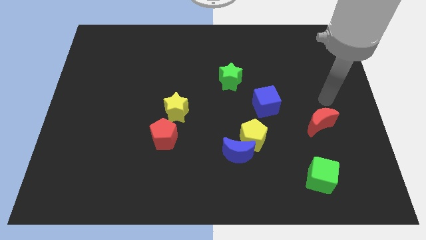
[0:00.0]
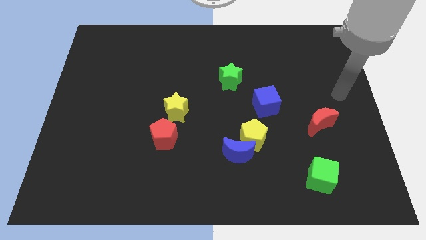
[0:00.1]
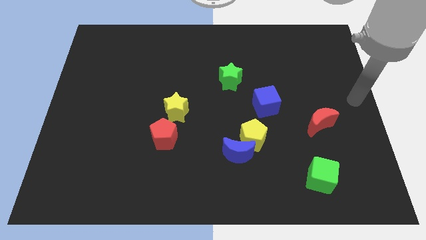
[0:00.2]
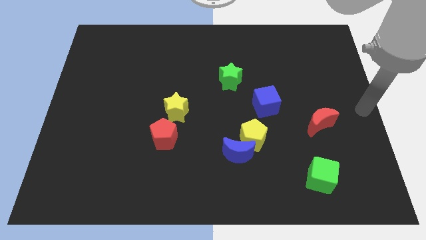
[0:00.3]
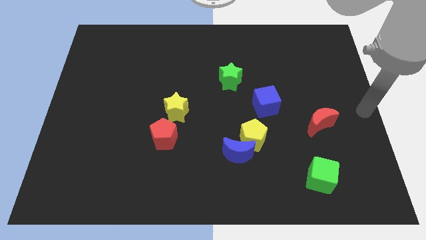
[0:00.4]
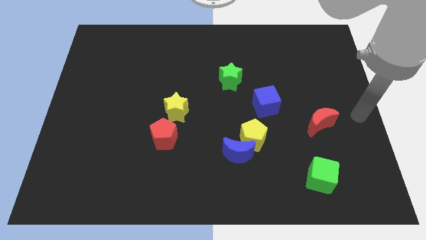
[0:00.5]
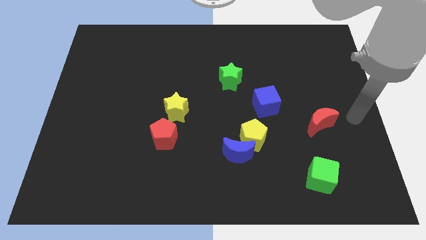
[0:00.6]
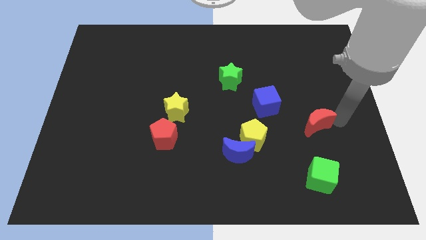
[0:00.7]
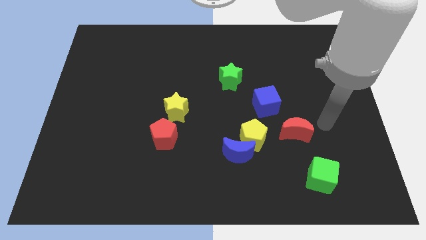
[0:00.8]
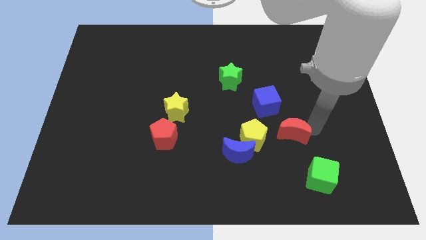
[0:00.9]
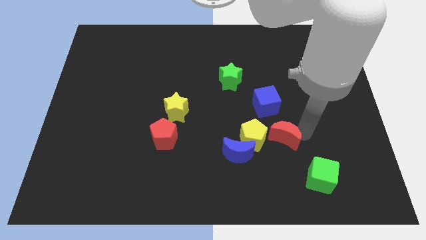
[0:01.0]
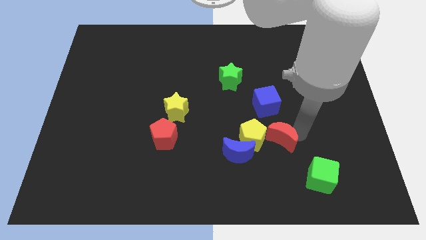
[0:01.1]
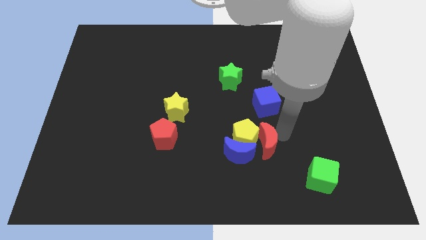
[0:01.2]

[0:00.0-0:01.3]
push the red moon into the yellow pentagon

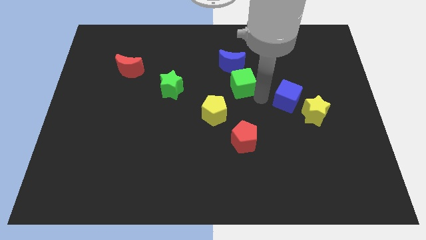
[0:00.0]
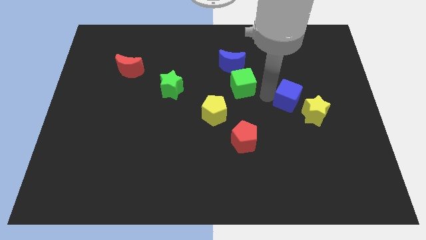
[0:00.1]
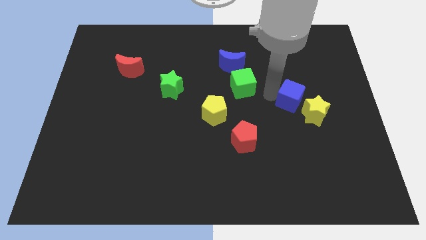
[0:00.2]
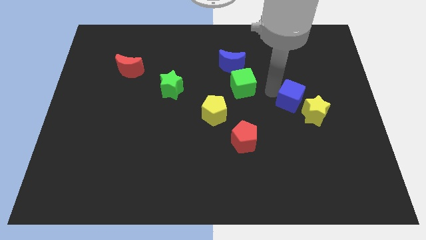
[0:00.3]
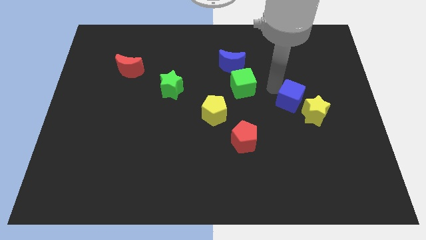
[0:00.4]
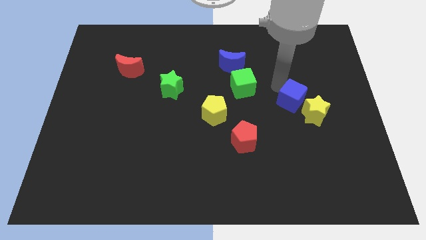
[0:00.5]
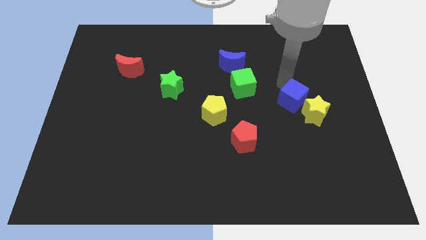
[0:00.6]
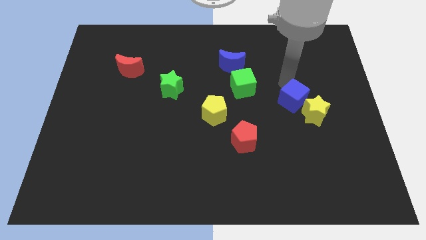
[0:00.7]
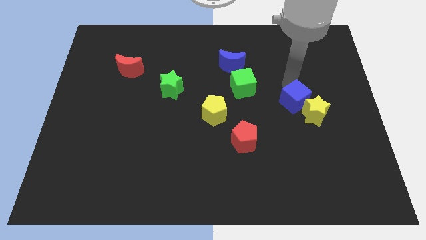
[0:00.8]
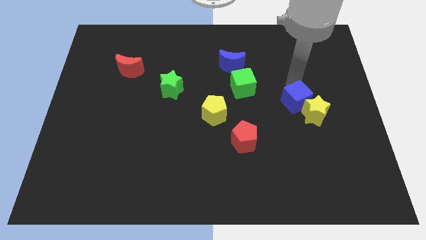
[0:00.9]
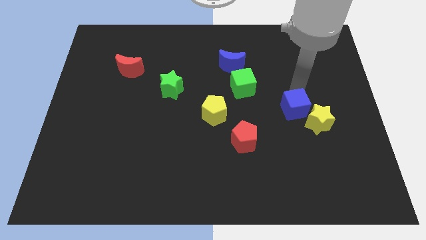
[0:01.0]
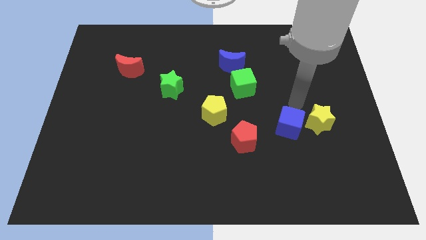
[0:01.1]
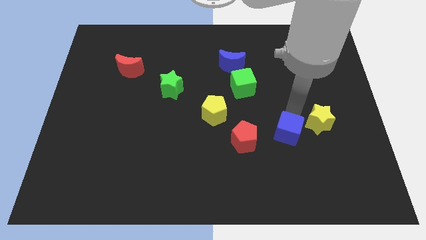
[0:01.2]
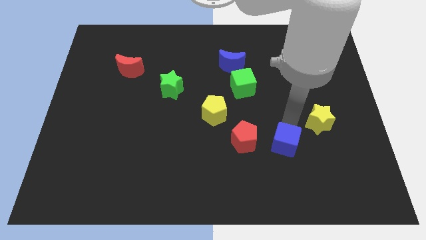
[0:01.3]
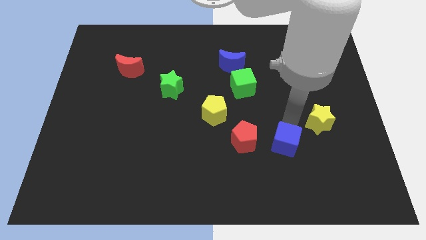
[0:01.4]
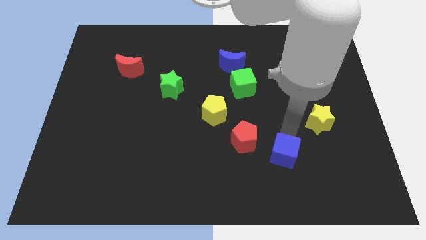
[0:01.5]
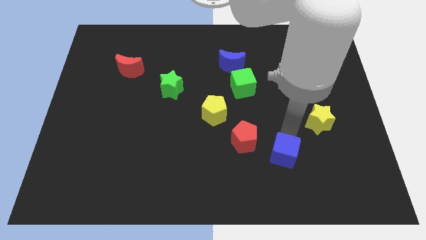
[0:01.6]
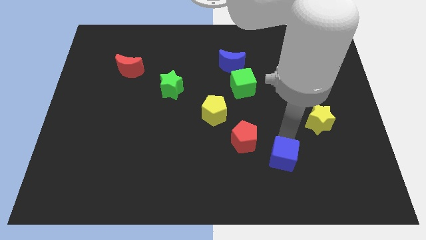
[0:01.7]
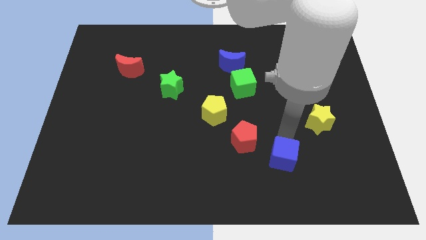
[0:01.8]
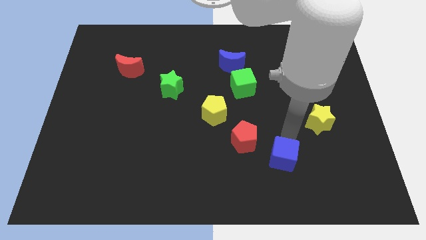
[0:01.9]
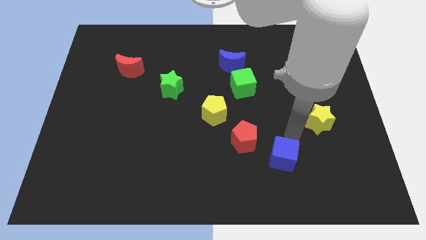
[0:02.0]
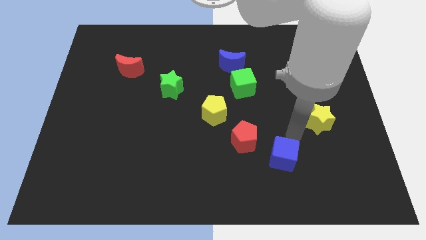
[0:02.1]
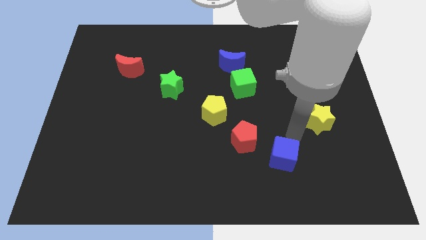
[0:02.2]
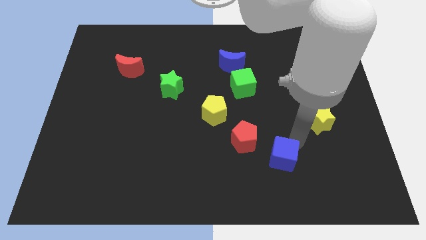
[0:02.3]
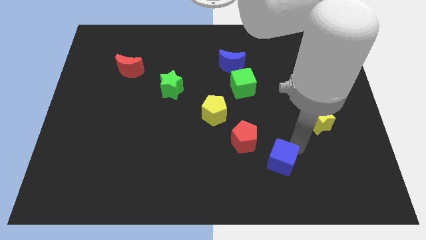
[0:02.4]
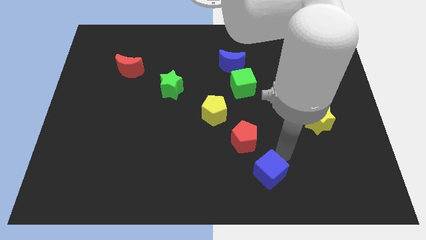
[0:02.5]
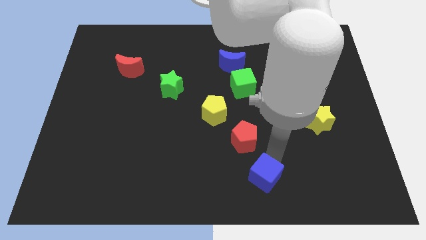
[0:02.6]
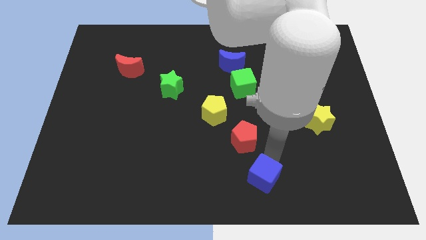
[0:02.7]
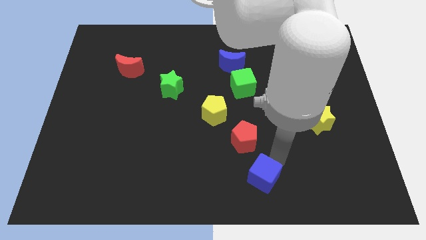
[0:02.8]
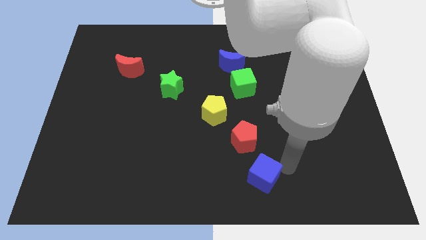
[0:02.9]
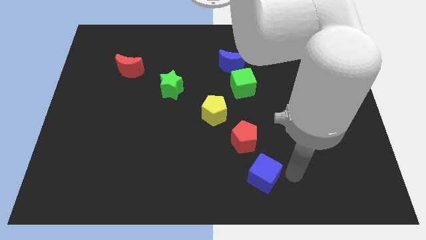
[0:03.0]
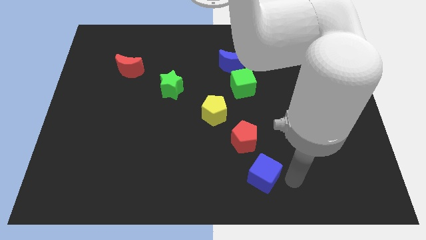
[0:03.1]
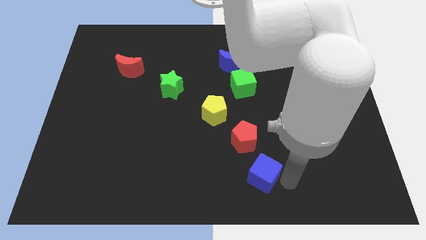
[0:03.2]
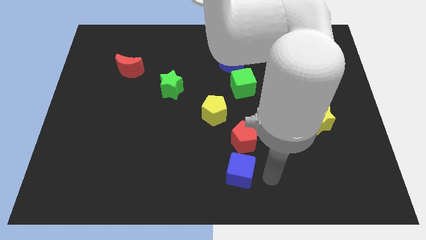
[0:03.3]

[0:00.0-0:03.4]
push the blue cube down to the red pentagon

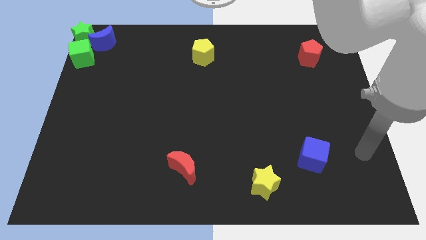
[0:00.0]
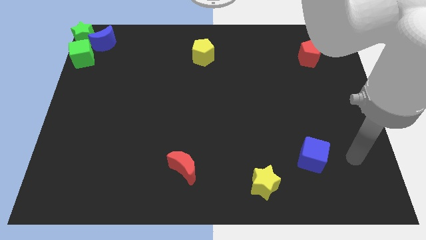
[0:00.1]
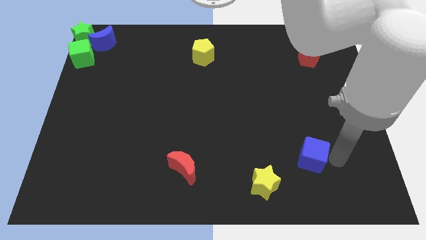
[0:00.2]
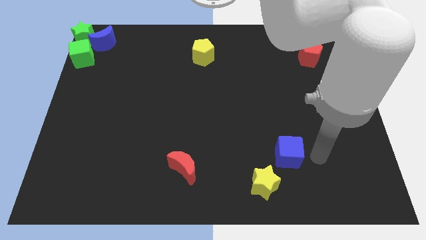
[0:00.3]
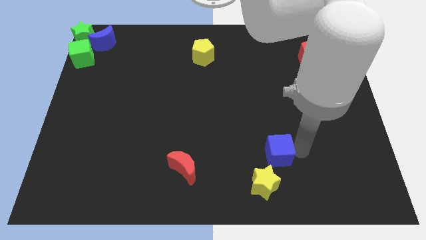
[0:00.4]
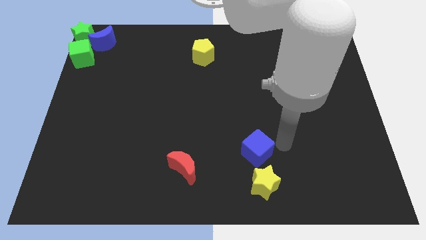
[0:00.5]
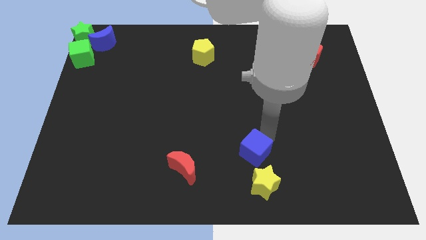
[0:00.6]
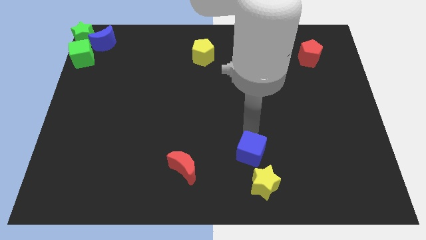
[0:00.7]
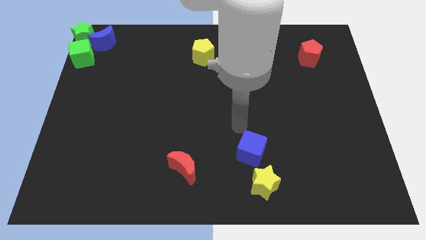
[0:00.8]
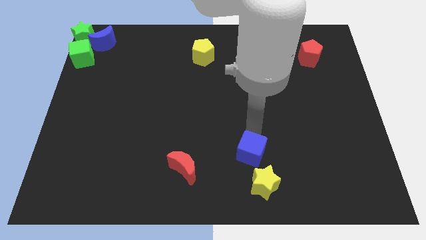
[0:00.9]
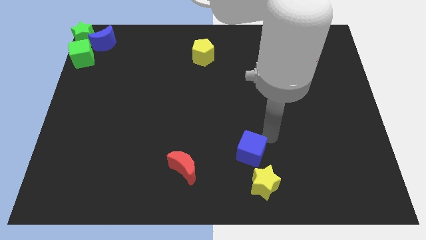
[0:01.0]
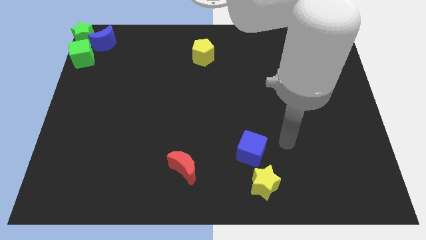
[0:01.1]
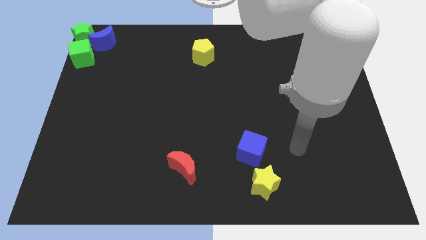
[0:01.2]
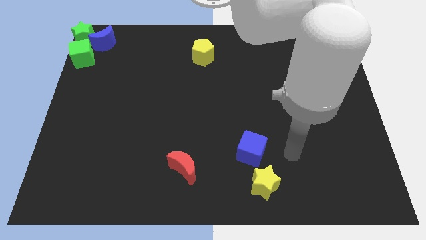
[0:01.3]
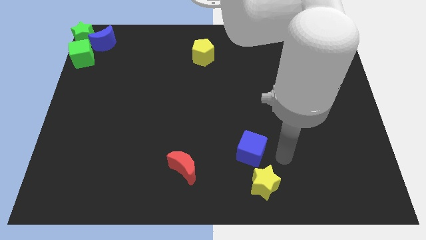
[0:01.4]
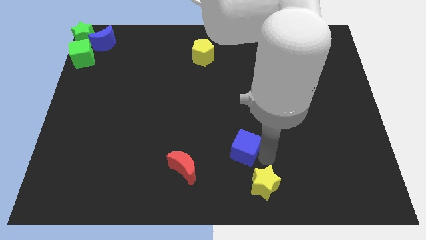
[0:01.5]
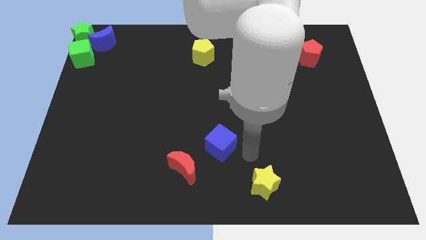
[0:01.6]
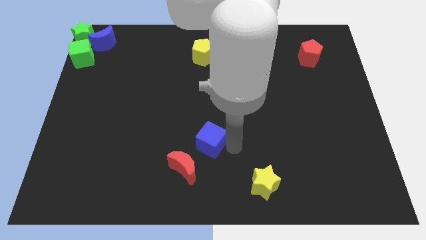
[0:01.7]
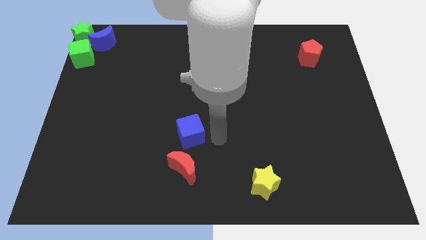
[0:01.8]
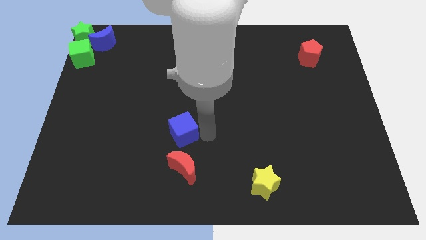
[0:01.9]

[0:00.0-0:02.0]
place the blue cube in between the yellow pentagon and red moon

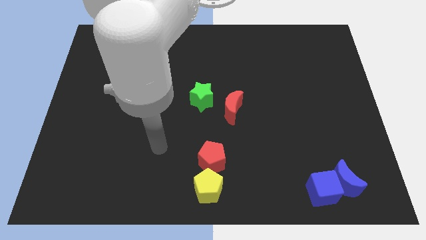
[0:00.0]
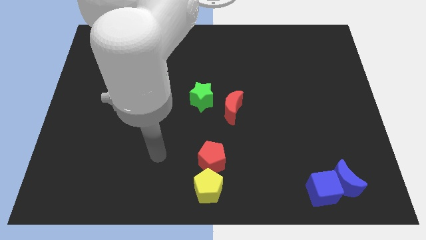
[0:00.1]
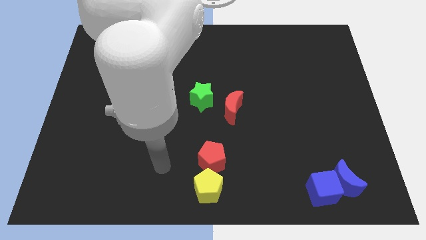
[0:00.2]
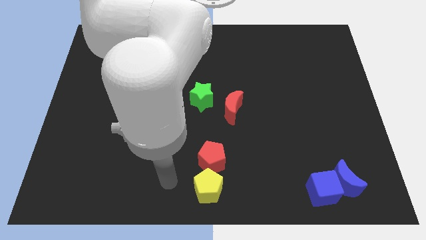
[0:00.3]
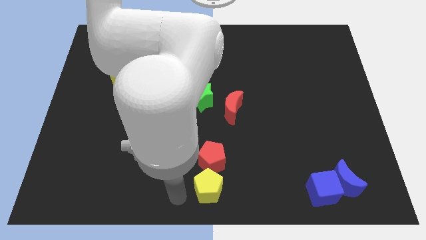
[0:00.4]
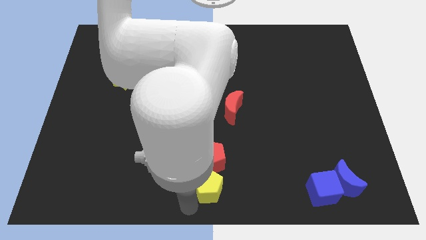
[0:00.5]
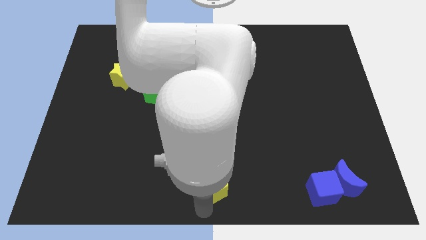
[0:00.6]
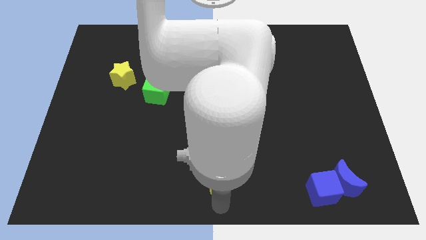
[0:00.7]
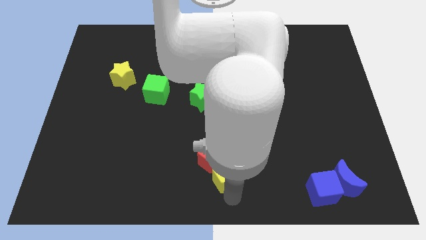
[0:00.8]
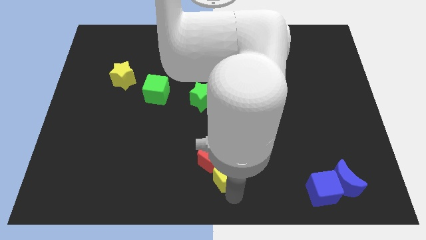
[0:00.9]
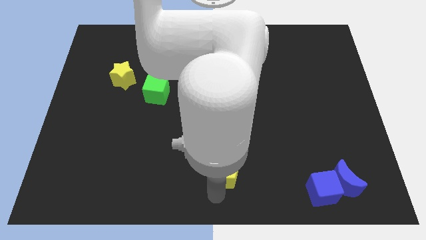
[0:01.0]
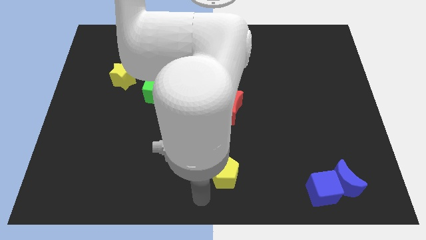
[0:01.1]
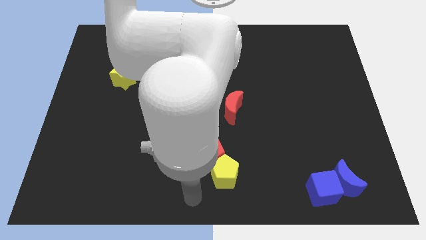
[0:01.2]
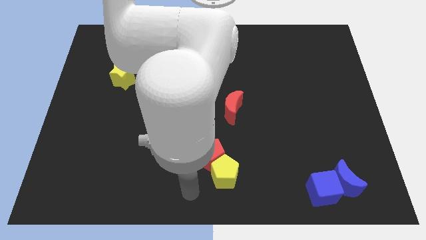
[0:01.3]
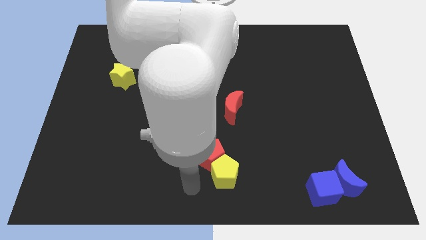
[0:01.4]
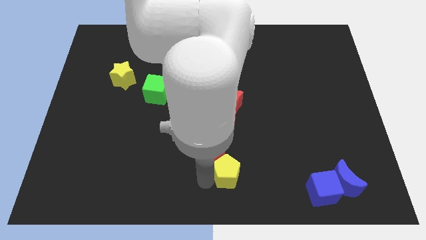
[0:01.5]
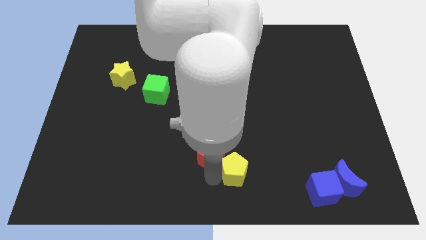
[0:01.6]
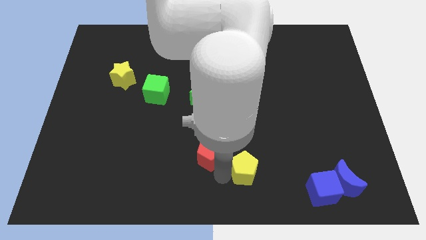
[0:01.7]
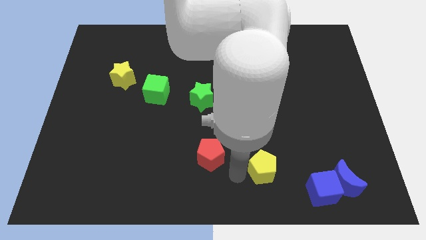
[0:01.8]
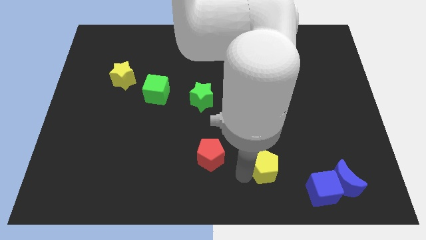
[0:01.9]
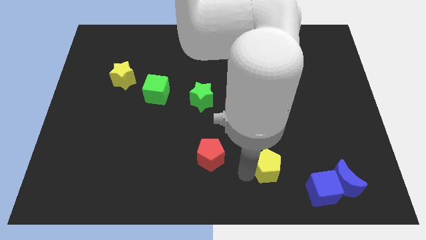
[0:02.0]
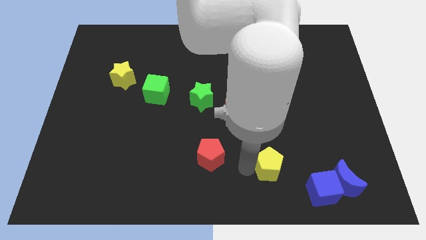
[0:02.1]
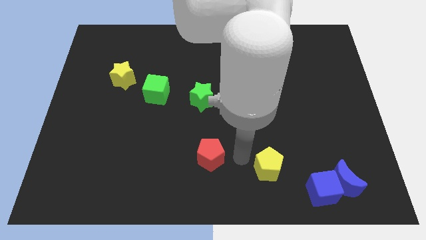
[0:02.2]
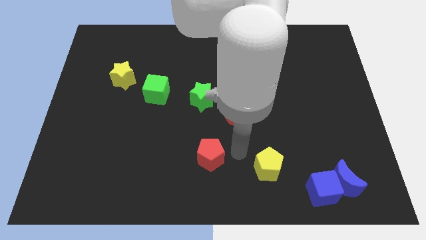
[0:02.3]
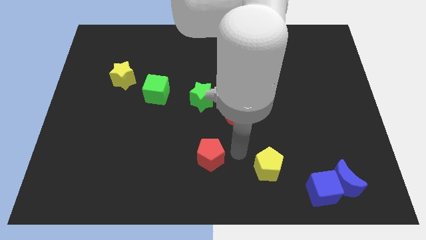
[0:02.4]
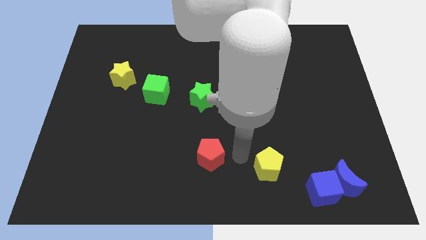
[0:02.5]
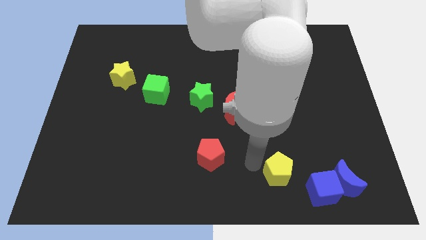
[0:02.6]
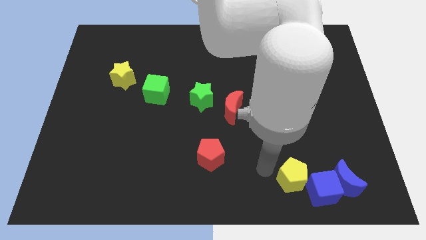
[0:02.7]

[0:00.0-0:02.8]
place yellow pentagon in between red pentagon and blue cube
